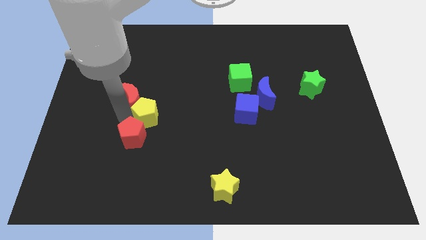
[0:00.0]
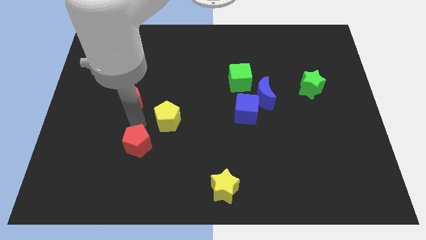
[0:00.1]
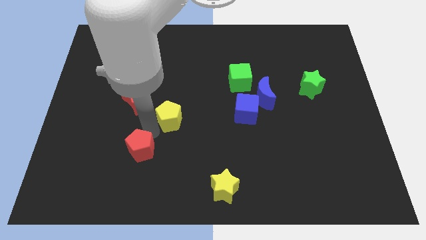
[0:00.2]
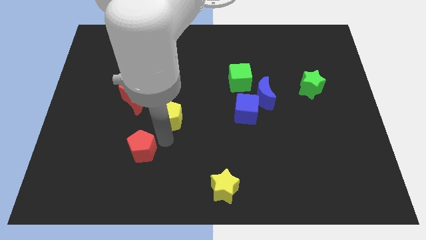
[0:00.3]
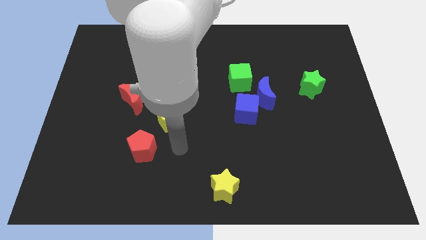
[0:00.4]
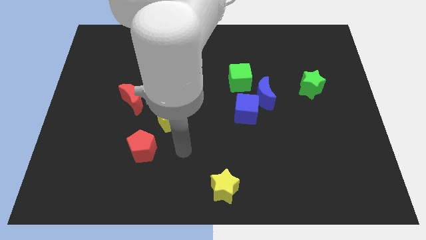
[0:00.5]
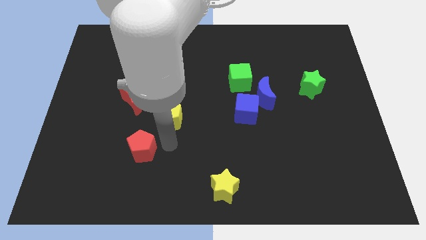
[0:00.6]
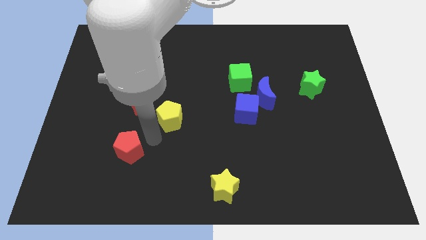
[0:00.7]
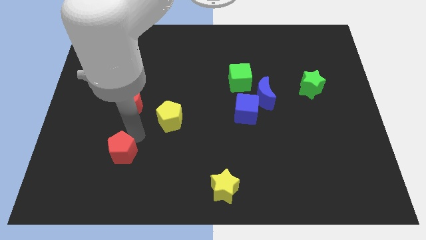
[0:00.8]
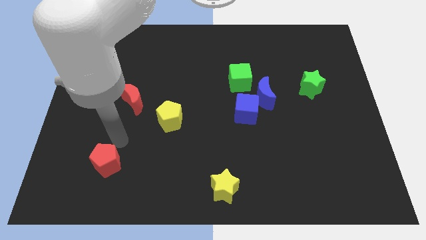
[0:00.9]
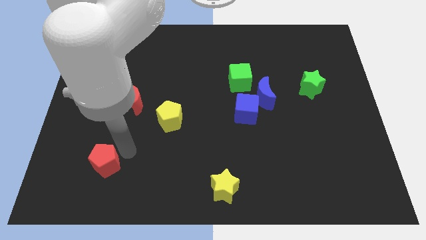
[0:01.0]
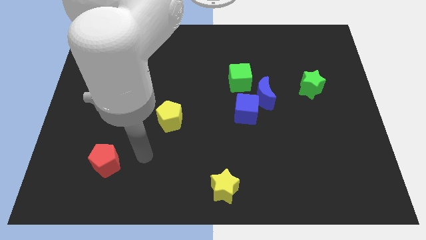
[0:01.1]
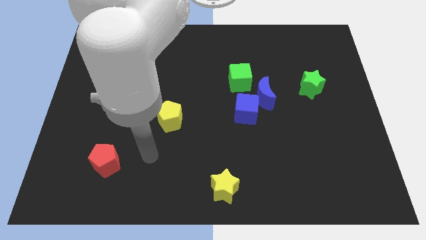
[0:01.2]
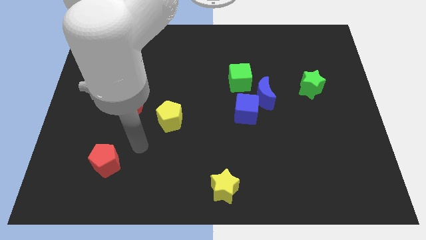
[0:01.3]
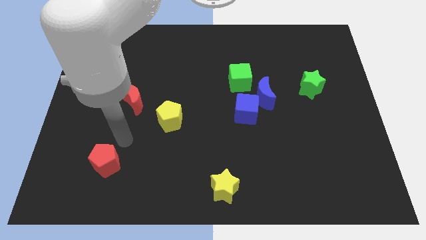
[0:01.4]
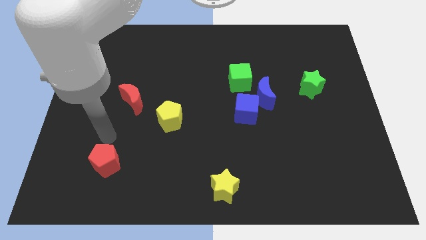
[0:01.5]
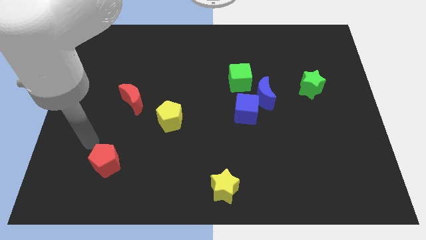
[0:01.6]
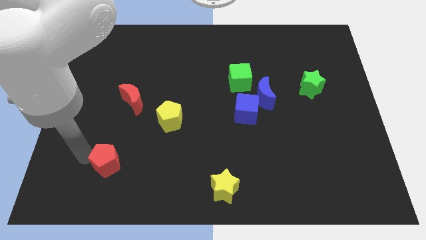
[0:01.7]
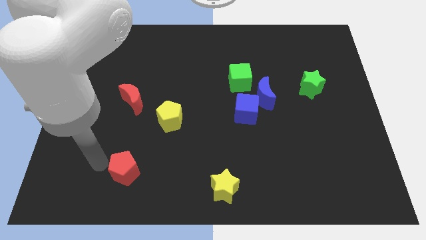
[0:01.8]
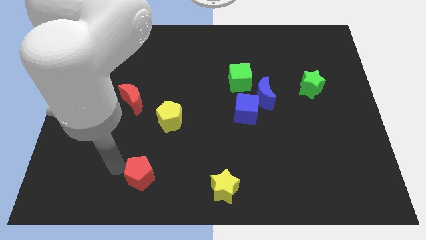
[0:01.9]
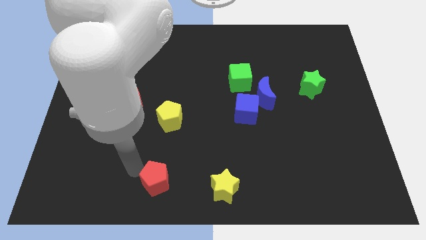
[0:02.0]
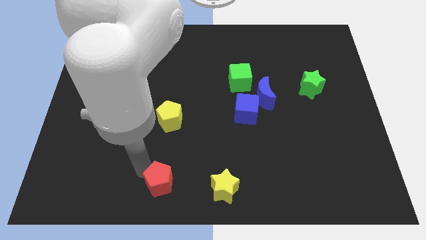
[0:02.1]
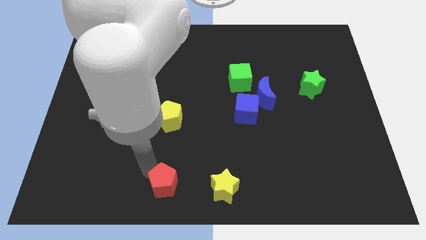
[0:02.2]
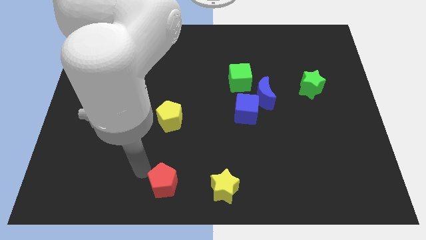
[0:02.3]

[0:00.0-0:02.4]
place the red pentagon to the left of the yellow star

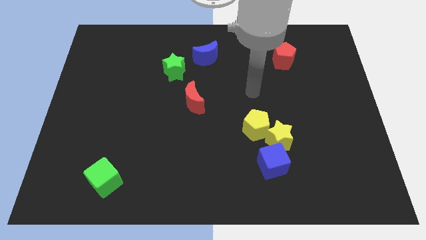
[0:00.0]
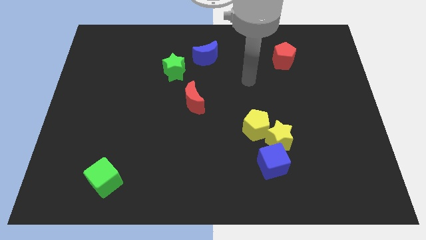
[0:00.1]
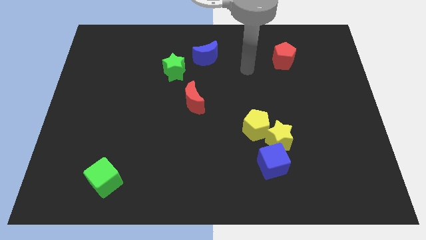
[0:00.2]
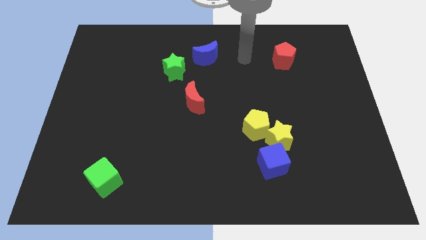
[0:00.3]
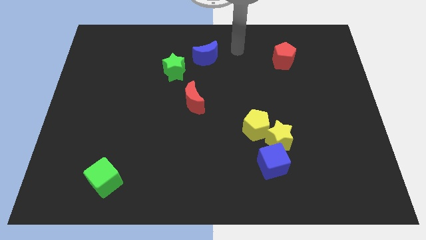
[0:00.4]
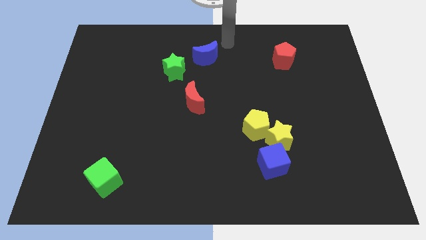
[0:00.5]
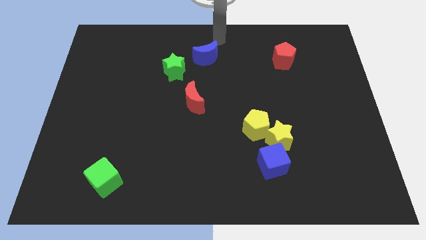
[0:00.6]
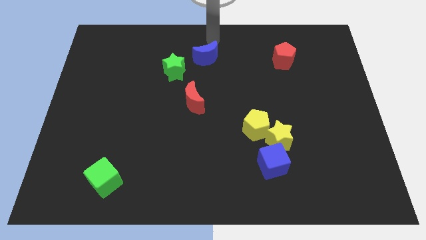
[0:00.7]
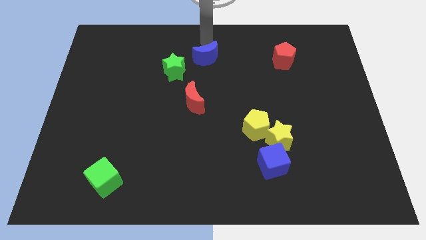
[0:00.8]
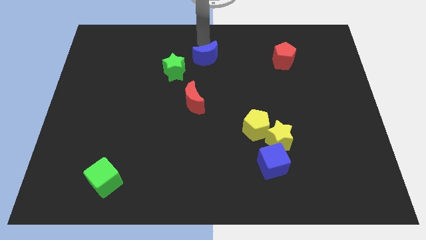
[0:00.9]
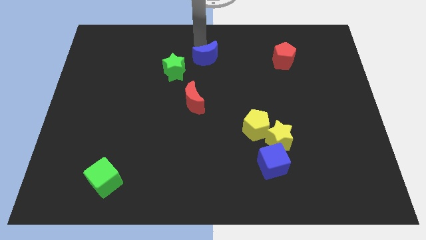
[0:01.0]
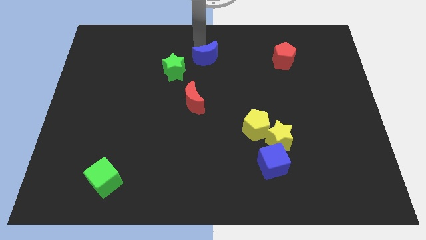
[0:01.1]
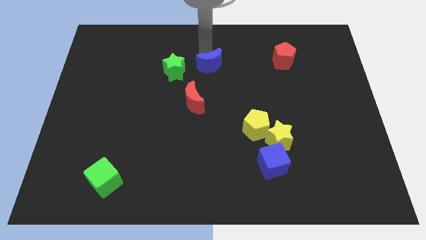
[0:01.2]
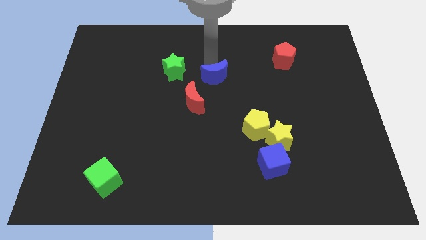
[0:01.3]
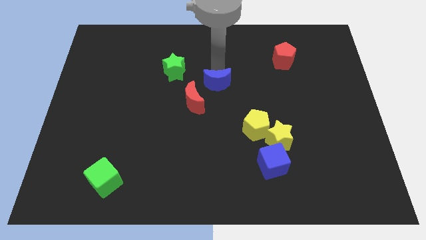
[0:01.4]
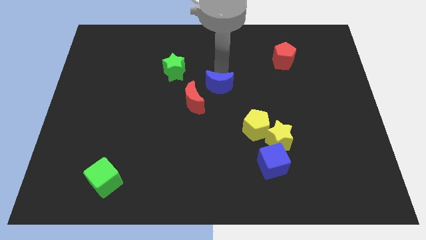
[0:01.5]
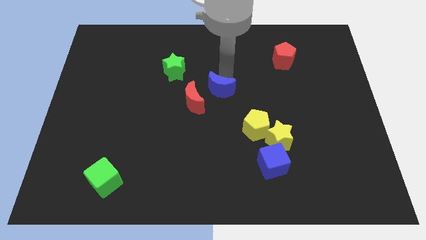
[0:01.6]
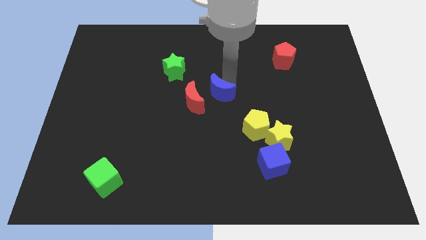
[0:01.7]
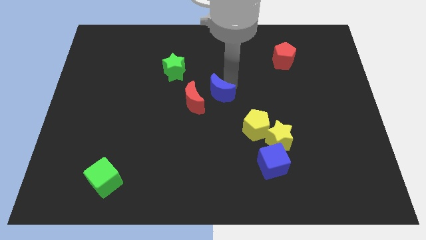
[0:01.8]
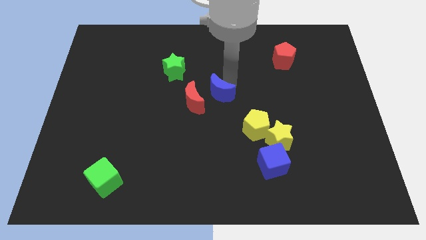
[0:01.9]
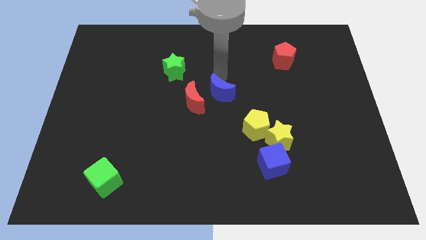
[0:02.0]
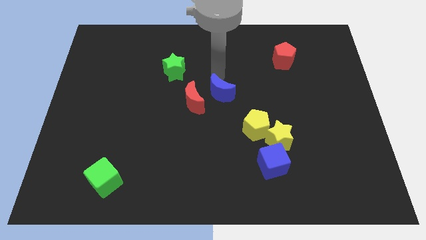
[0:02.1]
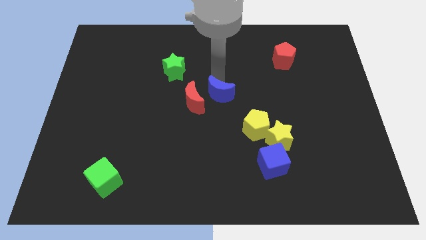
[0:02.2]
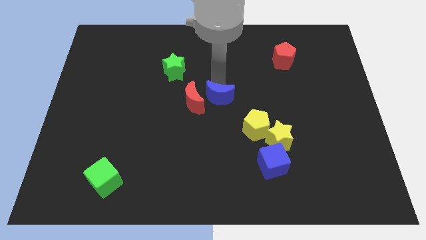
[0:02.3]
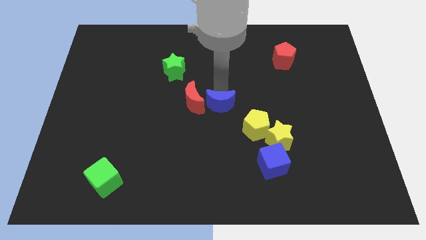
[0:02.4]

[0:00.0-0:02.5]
push the blue crescent to the right of the red crescent

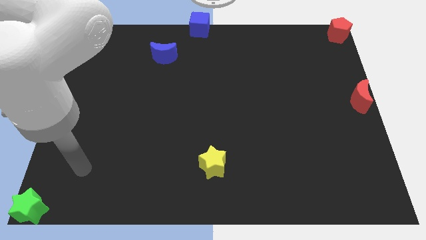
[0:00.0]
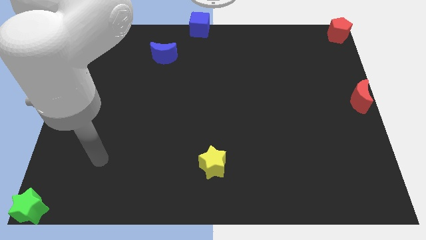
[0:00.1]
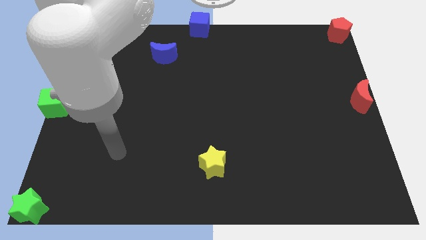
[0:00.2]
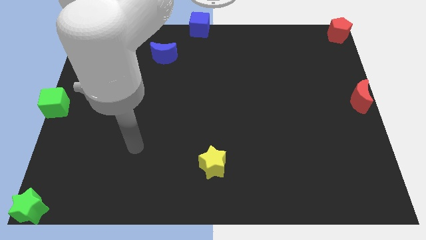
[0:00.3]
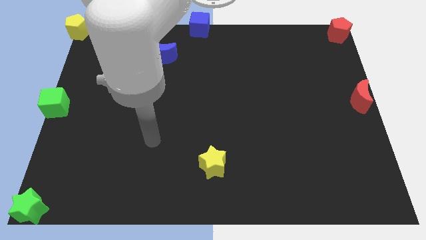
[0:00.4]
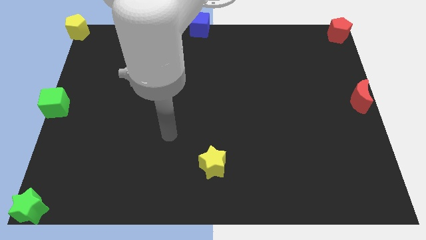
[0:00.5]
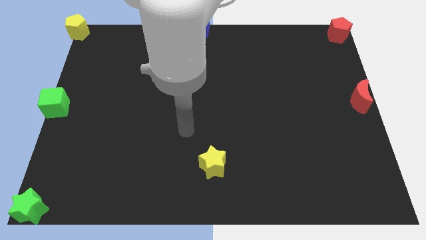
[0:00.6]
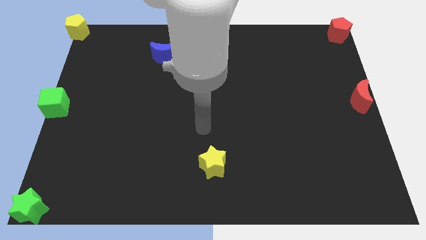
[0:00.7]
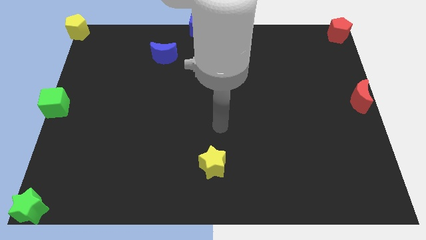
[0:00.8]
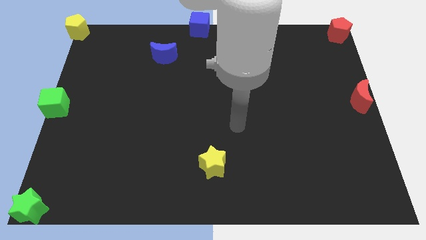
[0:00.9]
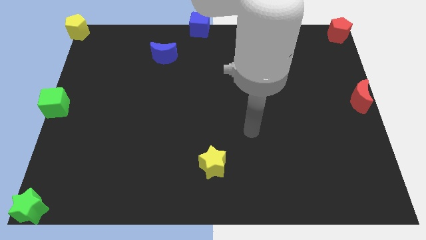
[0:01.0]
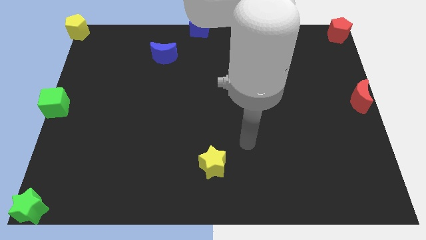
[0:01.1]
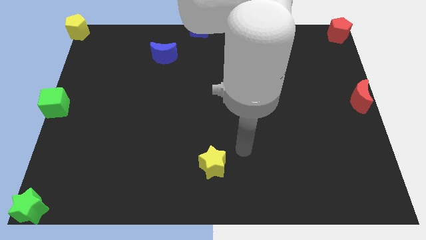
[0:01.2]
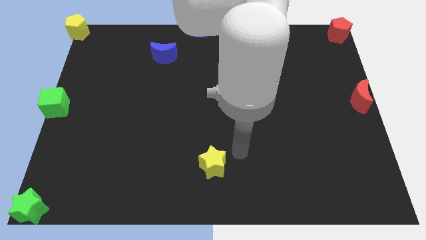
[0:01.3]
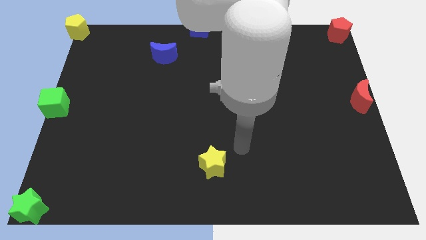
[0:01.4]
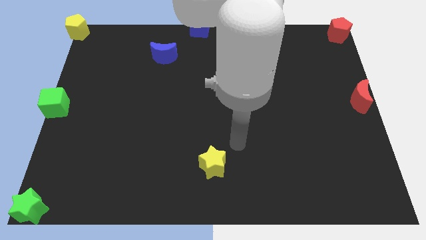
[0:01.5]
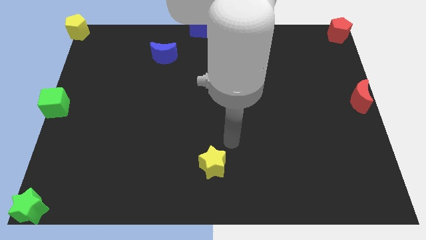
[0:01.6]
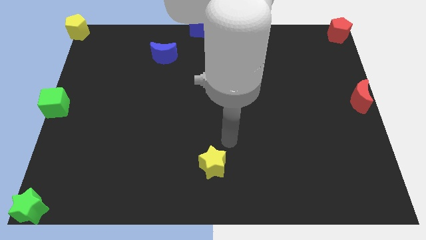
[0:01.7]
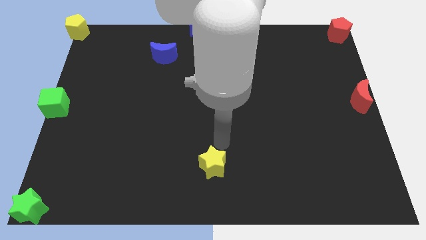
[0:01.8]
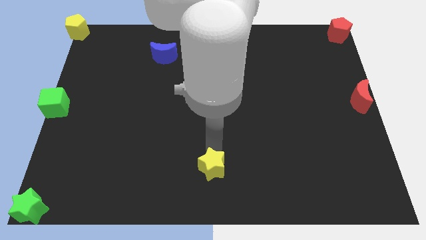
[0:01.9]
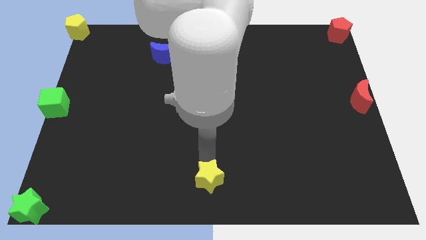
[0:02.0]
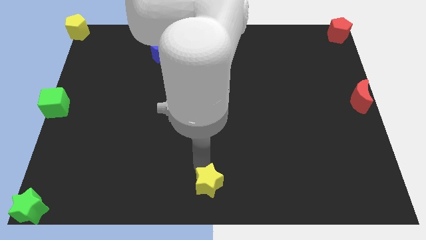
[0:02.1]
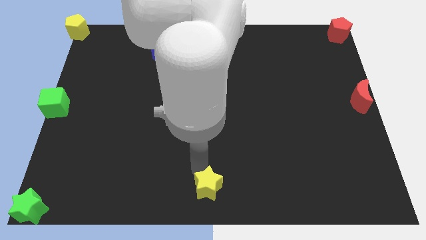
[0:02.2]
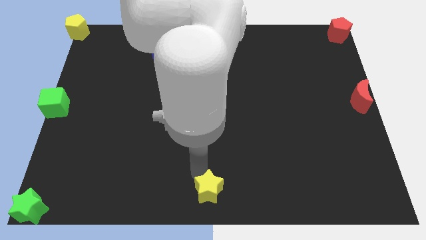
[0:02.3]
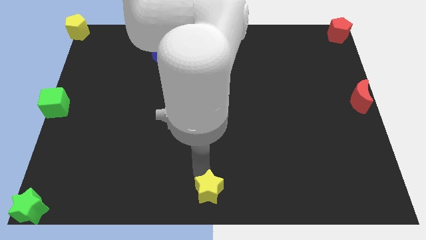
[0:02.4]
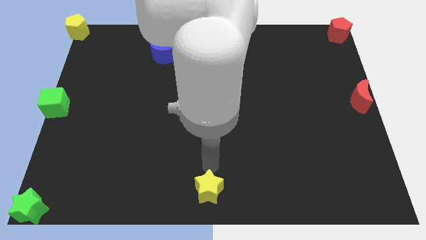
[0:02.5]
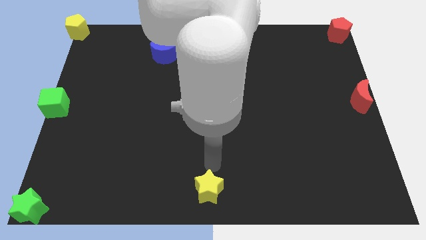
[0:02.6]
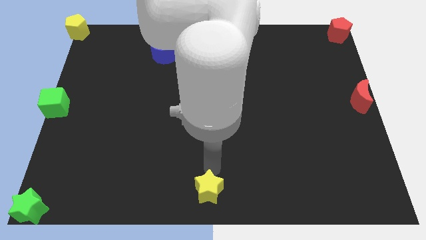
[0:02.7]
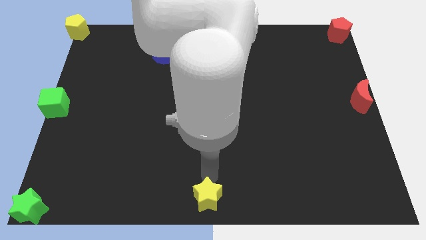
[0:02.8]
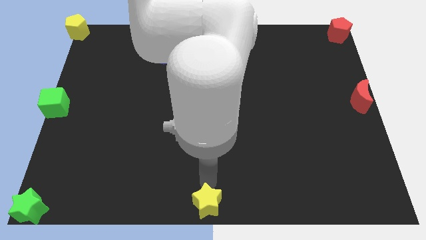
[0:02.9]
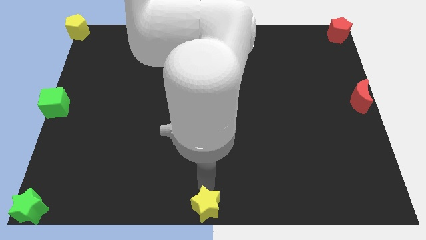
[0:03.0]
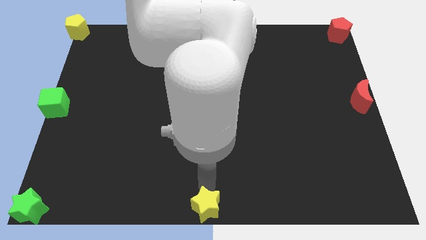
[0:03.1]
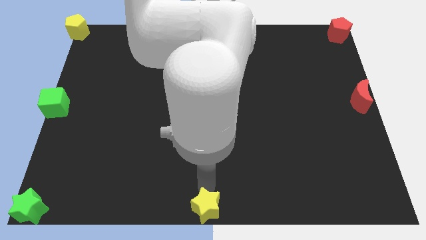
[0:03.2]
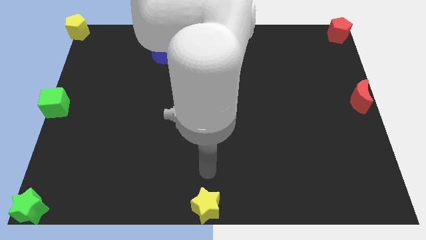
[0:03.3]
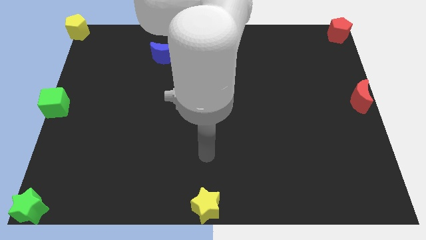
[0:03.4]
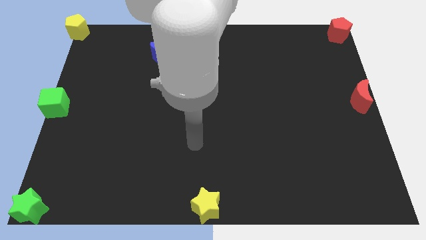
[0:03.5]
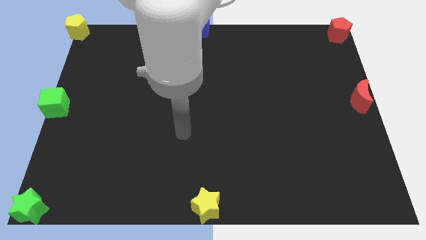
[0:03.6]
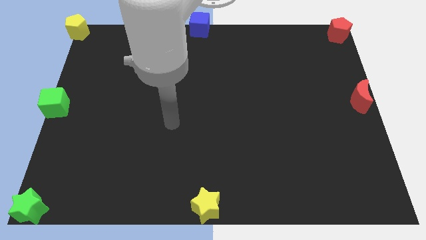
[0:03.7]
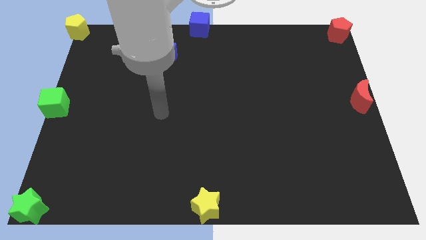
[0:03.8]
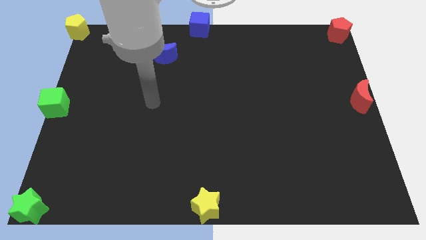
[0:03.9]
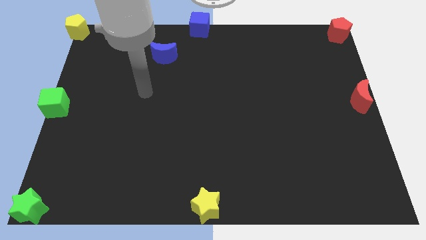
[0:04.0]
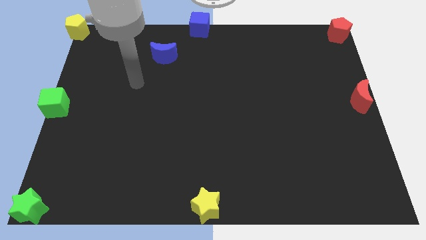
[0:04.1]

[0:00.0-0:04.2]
push the yellow star to the bottom center of the board
